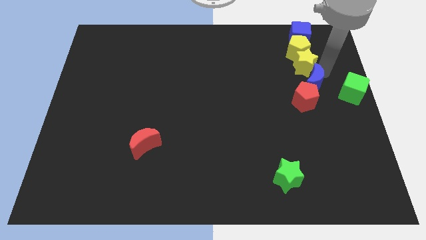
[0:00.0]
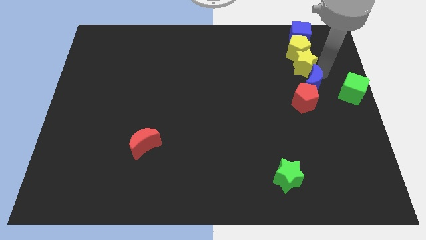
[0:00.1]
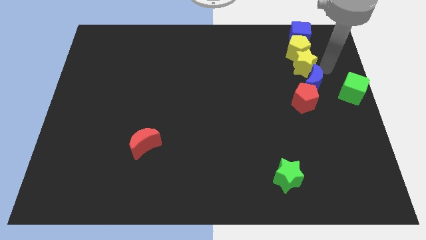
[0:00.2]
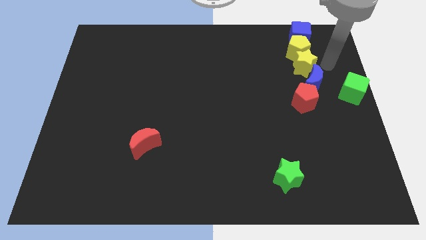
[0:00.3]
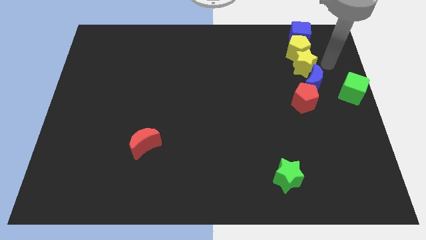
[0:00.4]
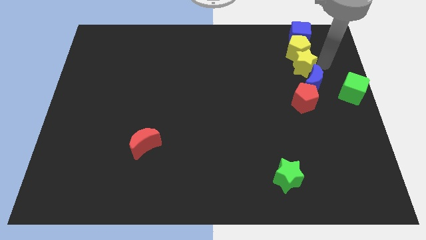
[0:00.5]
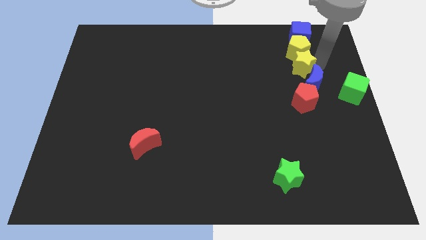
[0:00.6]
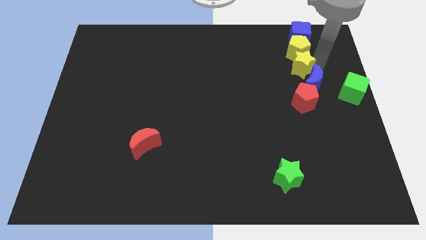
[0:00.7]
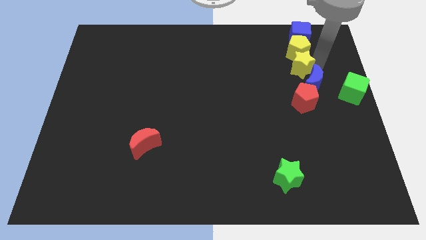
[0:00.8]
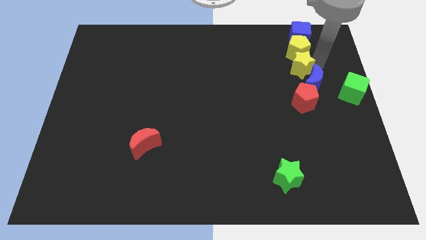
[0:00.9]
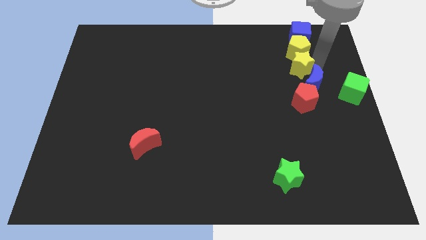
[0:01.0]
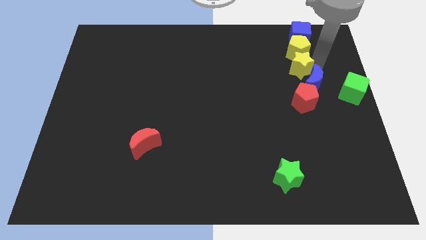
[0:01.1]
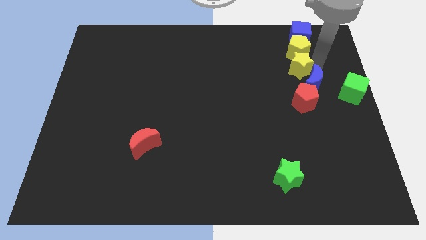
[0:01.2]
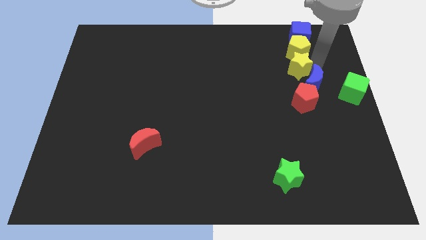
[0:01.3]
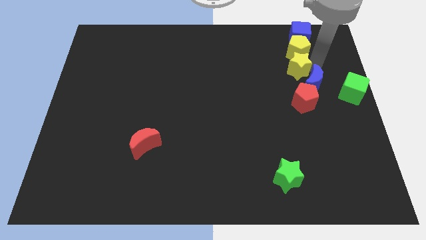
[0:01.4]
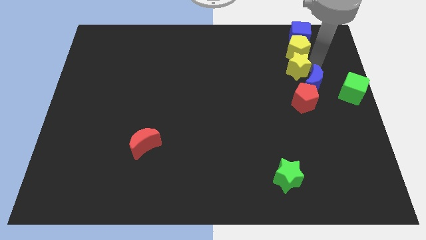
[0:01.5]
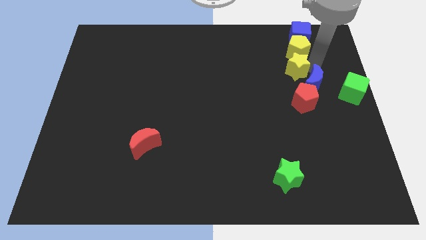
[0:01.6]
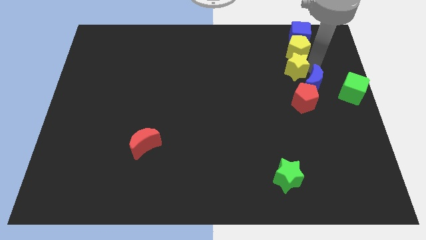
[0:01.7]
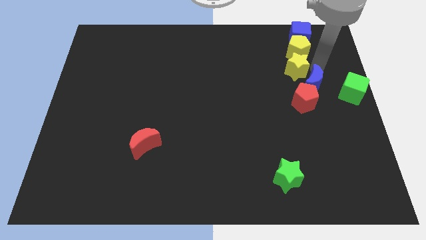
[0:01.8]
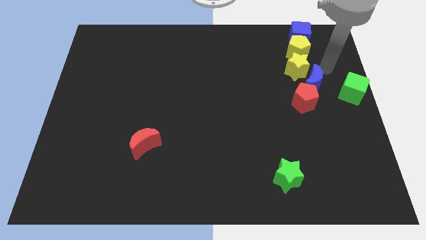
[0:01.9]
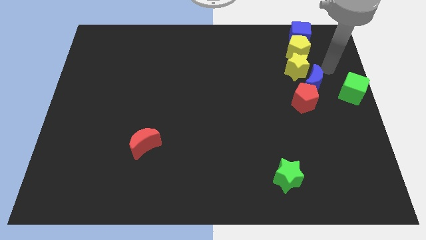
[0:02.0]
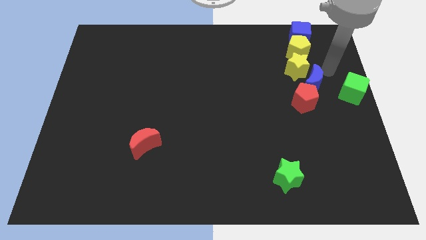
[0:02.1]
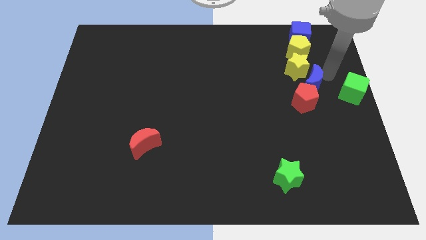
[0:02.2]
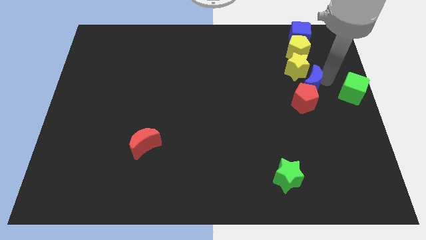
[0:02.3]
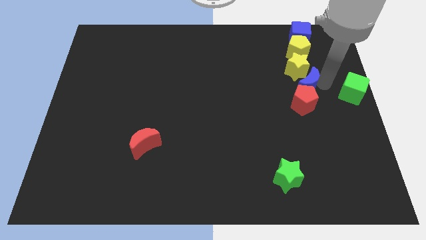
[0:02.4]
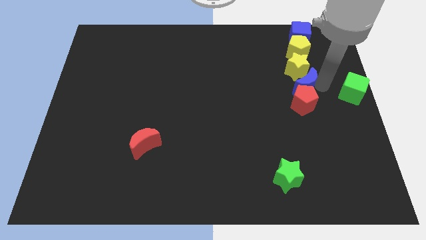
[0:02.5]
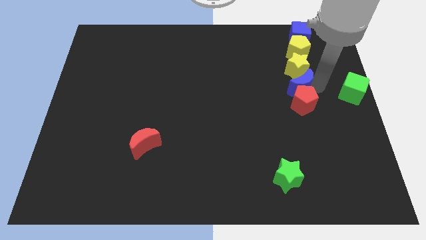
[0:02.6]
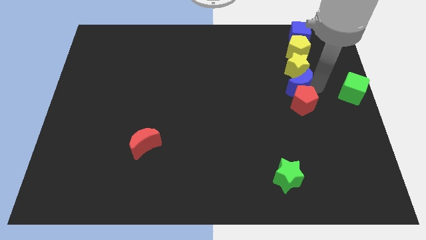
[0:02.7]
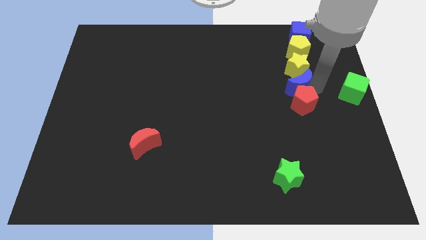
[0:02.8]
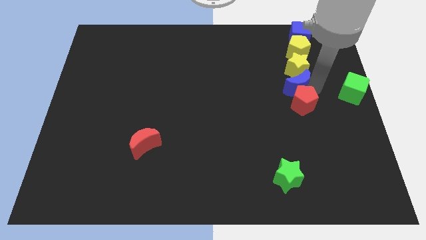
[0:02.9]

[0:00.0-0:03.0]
place the blue crescent in between the yellow star and the red pentagon

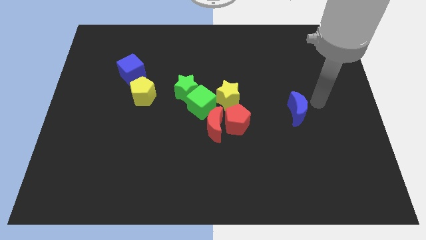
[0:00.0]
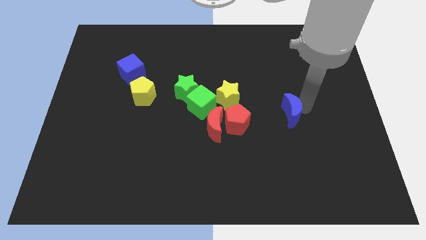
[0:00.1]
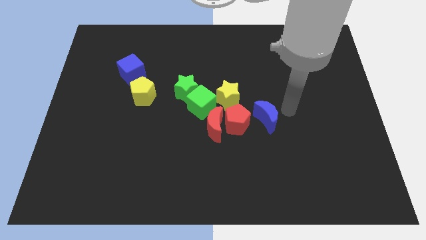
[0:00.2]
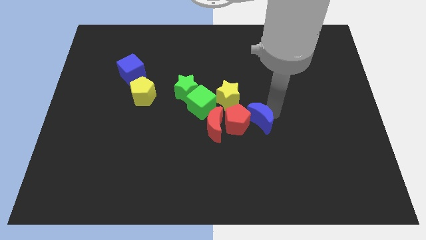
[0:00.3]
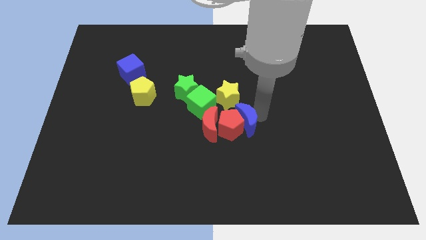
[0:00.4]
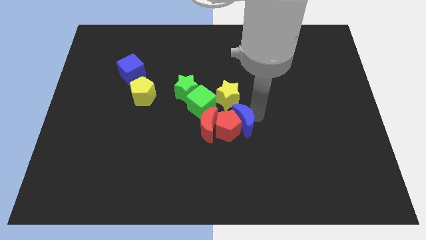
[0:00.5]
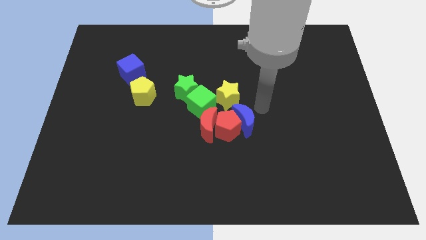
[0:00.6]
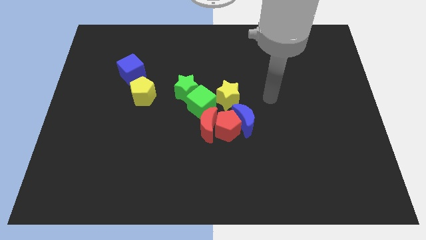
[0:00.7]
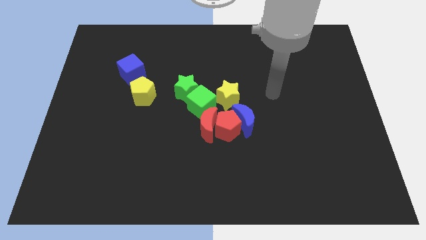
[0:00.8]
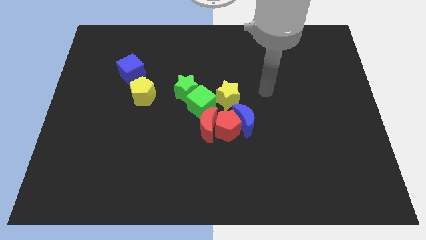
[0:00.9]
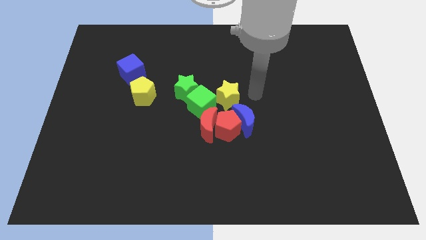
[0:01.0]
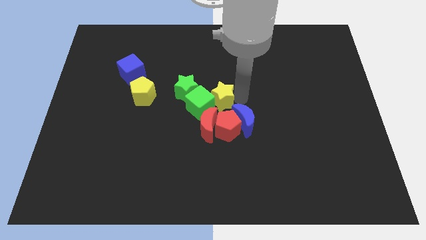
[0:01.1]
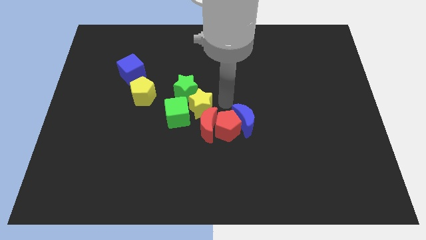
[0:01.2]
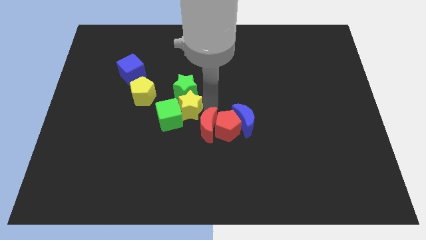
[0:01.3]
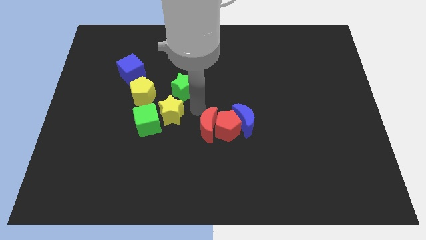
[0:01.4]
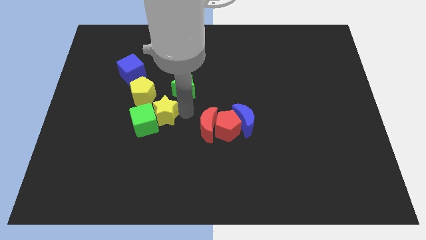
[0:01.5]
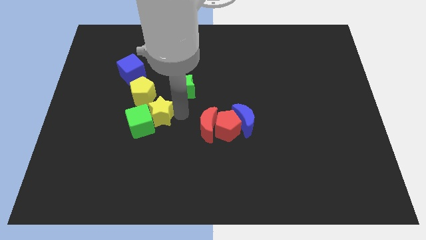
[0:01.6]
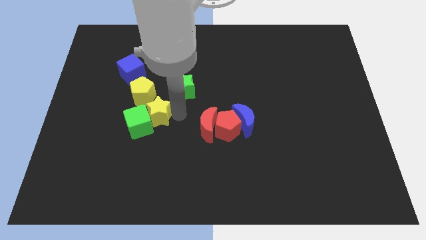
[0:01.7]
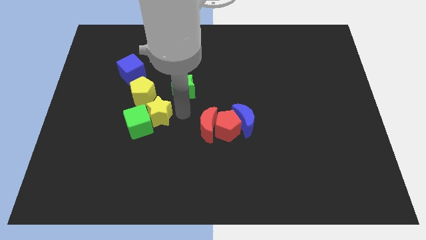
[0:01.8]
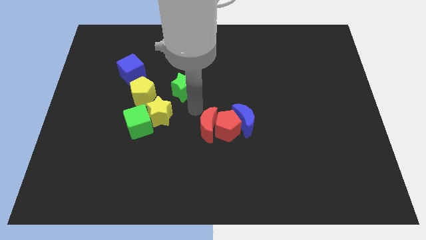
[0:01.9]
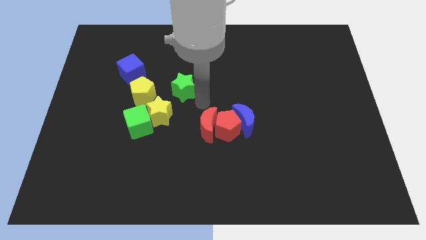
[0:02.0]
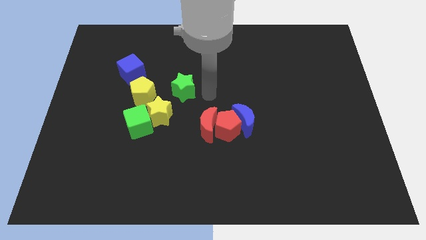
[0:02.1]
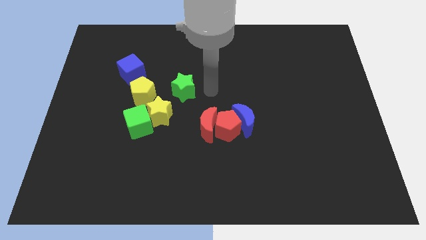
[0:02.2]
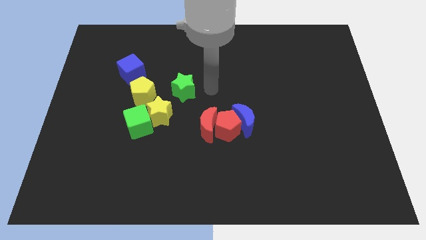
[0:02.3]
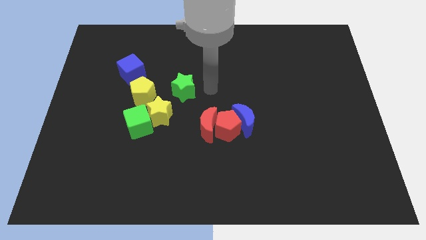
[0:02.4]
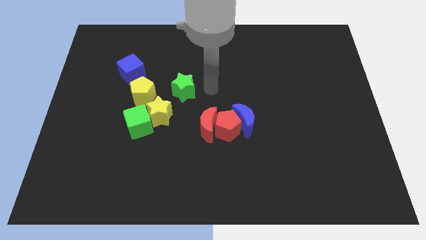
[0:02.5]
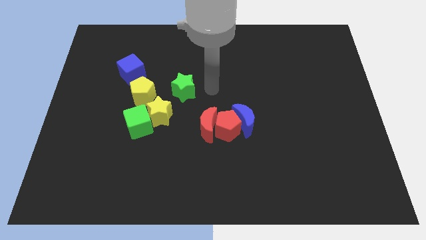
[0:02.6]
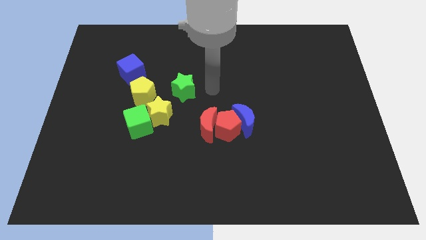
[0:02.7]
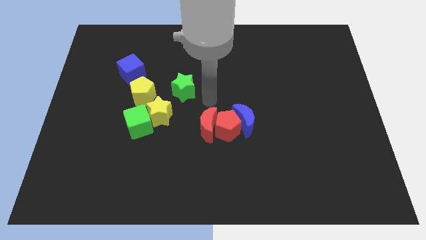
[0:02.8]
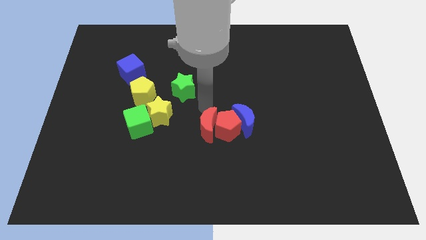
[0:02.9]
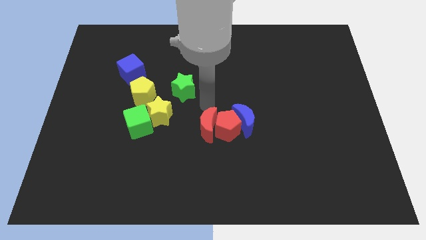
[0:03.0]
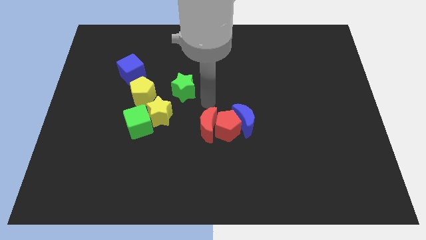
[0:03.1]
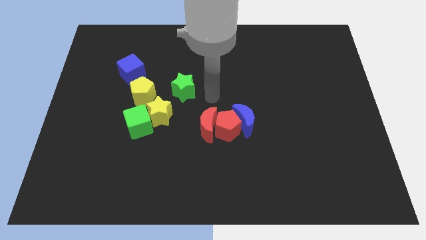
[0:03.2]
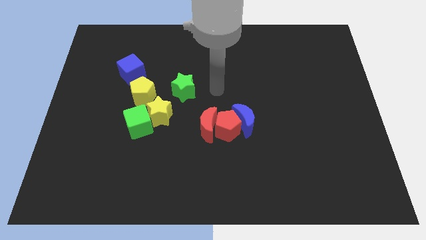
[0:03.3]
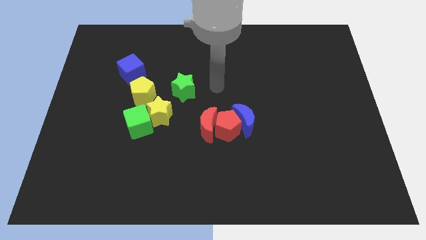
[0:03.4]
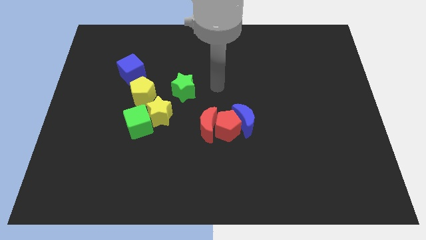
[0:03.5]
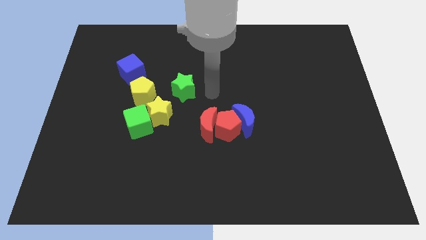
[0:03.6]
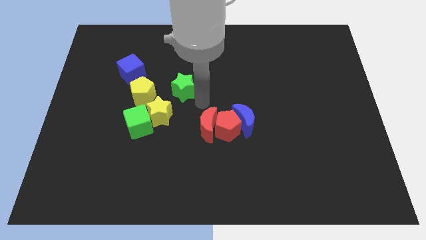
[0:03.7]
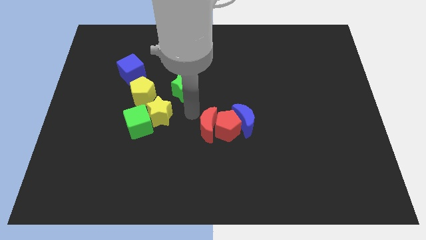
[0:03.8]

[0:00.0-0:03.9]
move your arm towards the bottom side of the green star

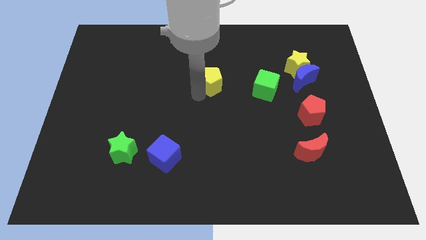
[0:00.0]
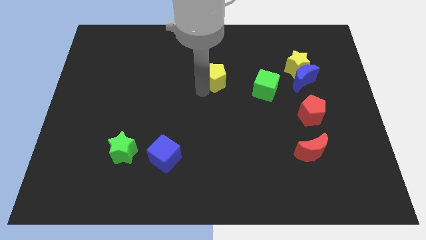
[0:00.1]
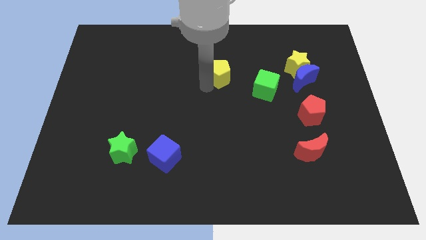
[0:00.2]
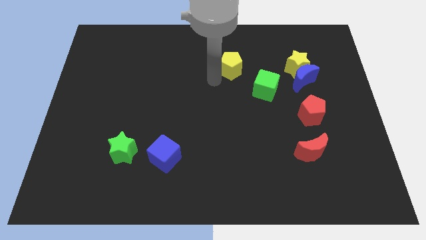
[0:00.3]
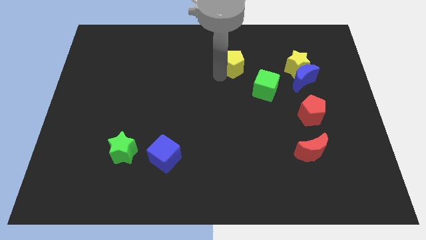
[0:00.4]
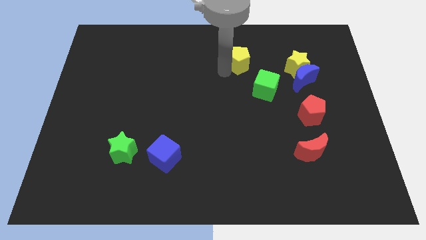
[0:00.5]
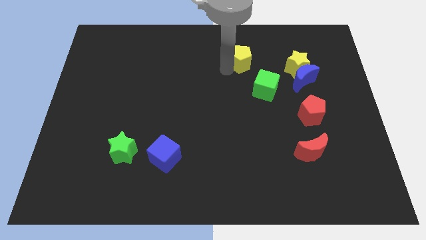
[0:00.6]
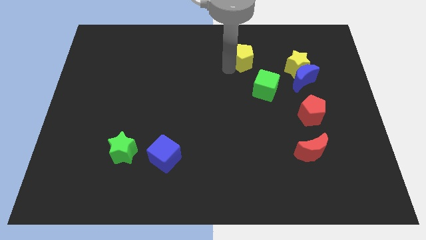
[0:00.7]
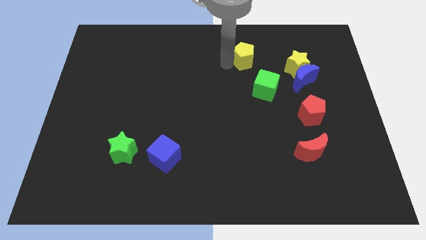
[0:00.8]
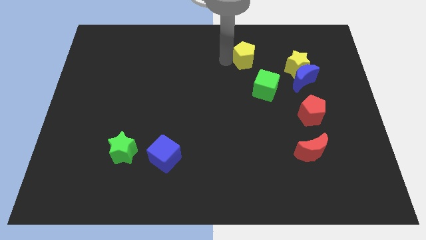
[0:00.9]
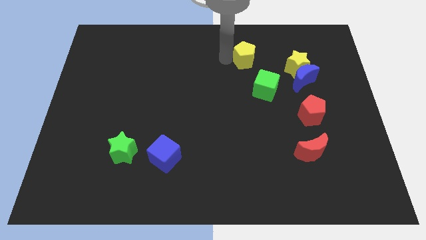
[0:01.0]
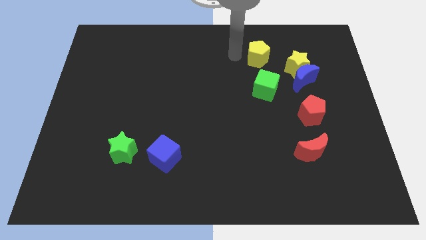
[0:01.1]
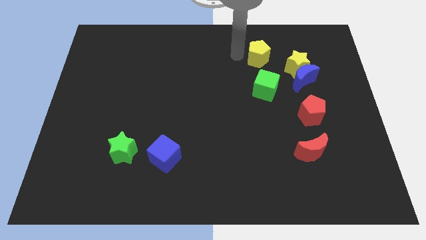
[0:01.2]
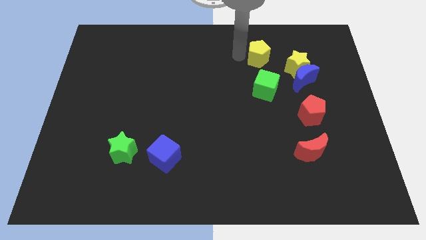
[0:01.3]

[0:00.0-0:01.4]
place the yellow pentagon diagonally to yellow star

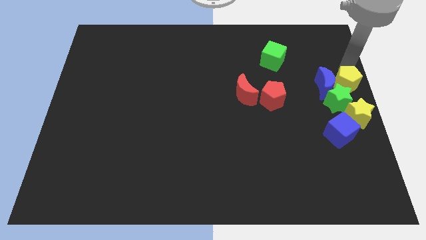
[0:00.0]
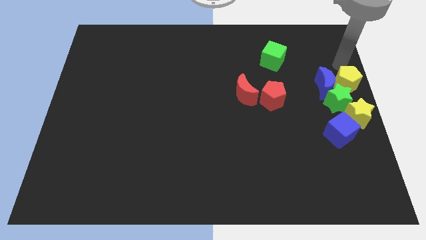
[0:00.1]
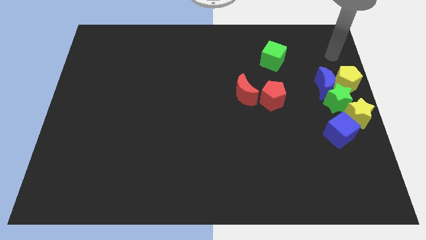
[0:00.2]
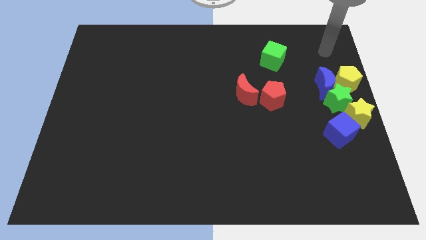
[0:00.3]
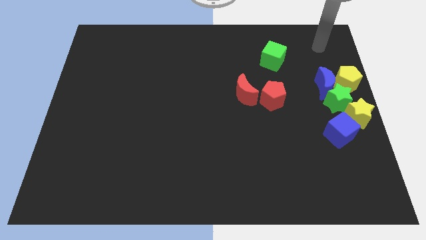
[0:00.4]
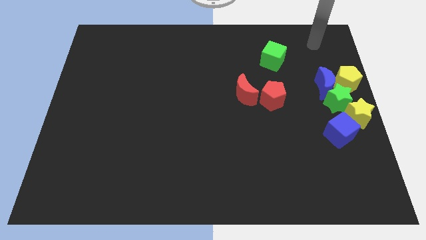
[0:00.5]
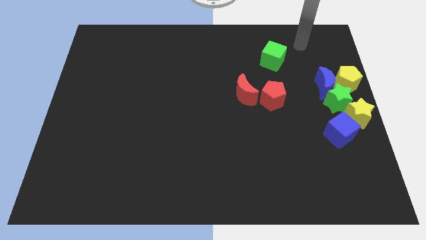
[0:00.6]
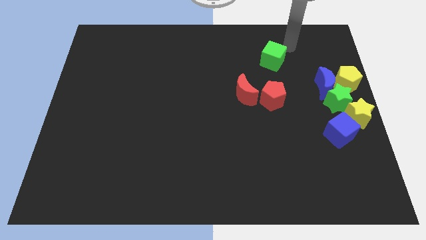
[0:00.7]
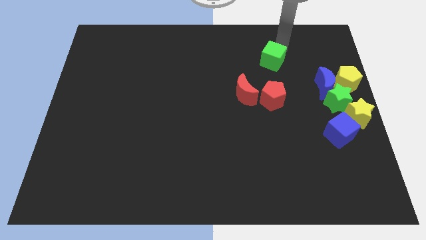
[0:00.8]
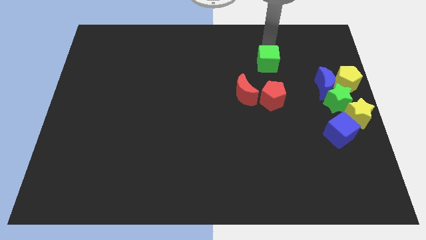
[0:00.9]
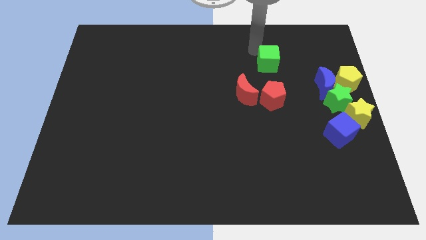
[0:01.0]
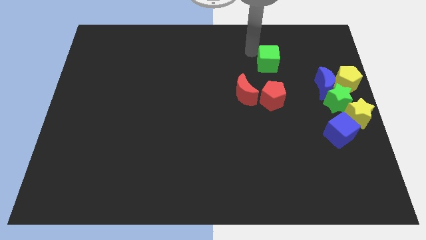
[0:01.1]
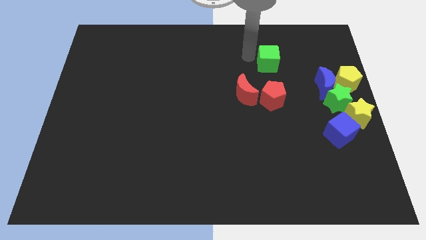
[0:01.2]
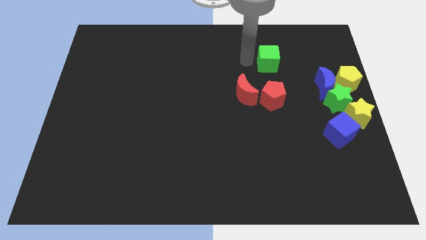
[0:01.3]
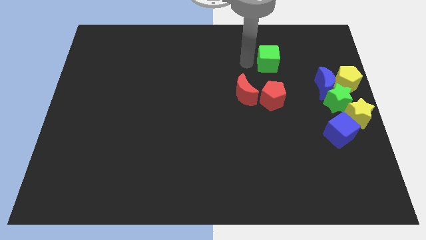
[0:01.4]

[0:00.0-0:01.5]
move the arm to the green cube
